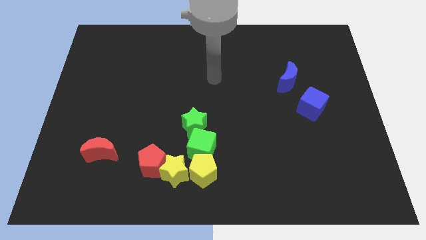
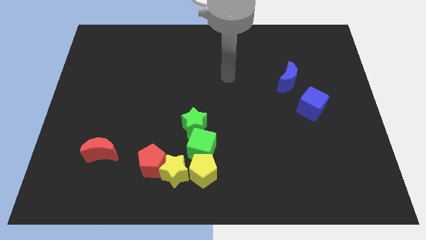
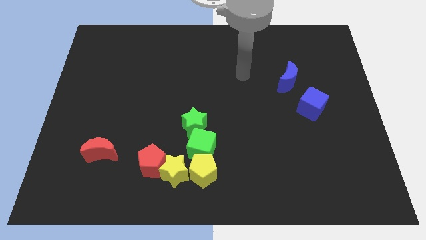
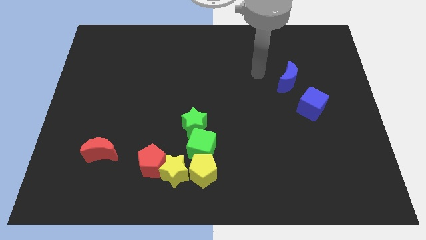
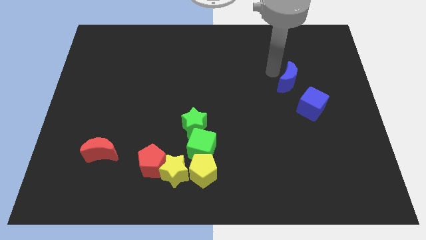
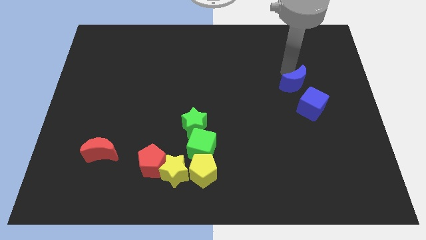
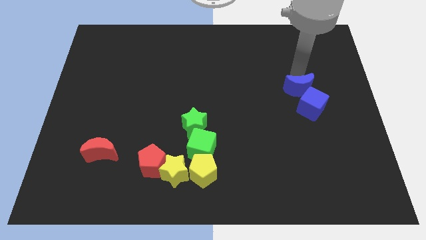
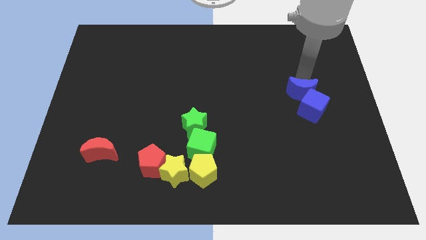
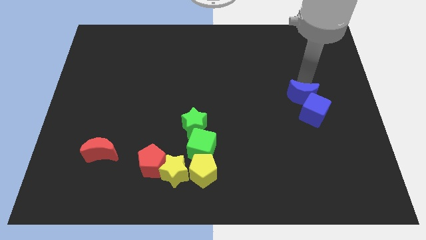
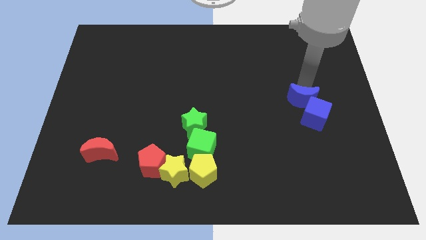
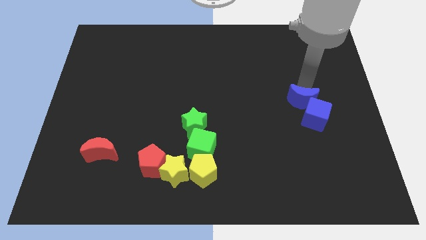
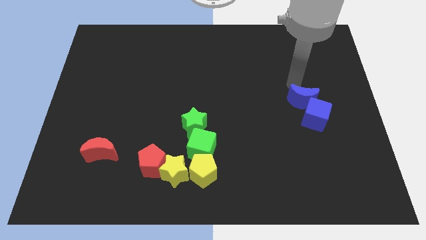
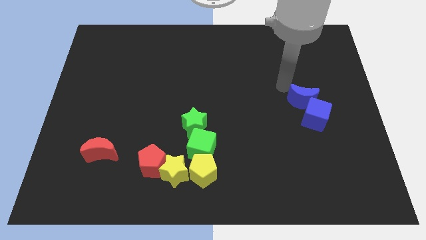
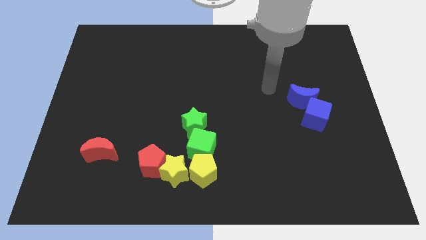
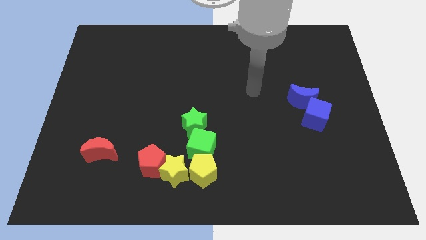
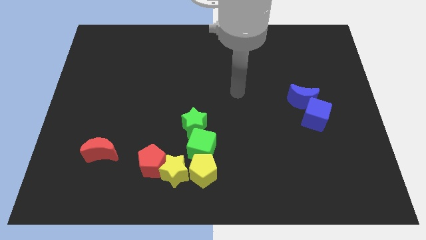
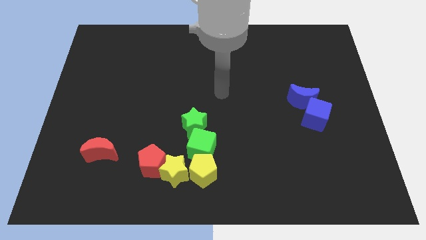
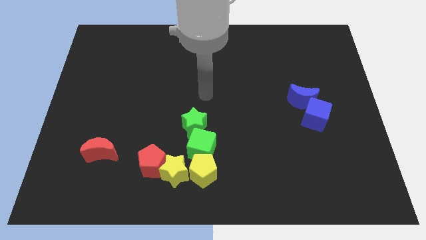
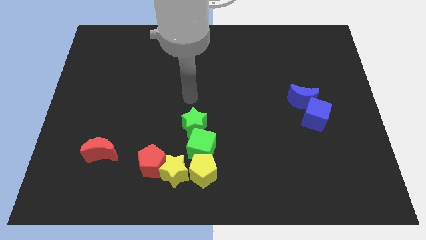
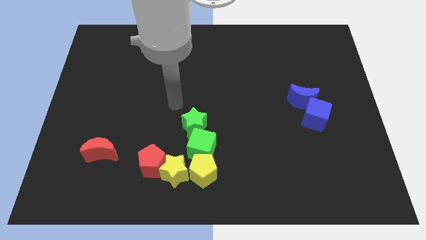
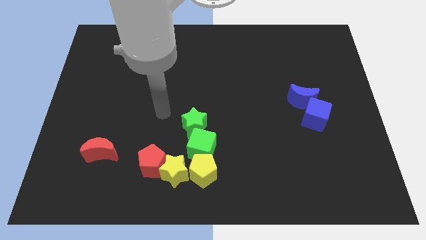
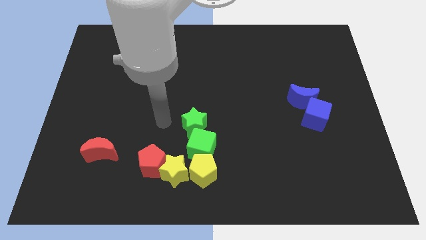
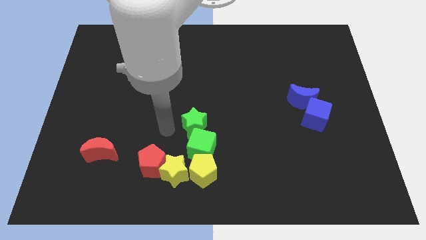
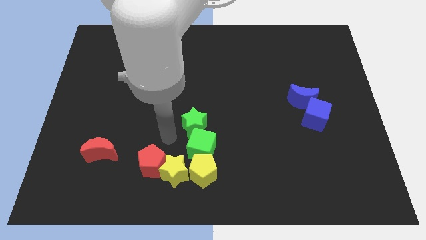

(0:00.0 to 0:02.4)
move the blue crescent into the blue cube

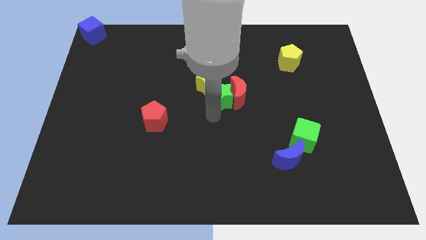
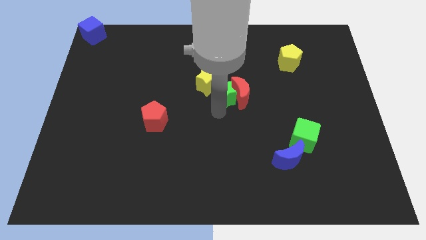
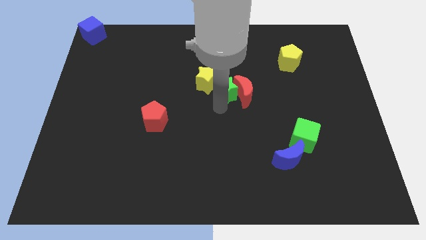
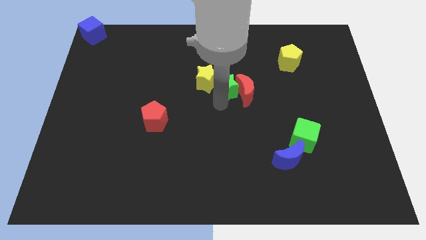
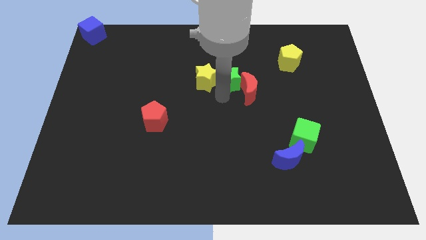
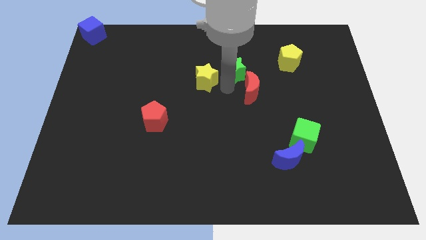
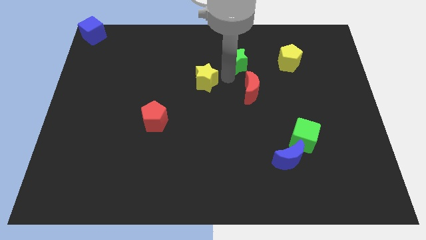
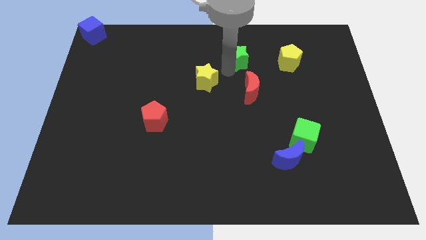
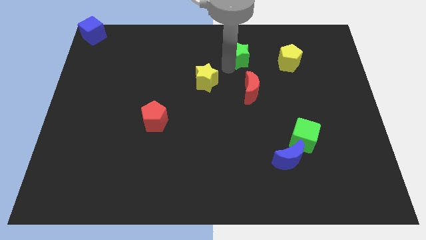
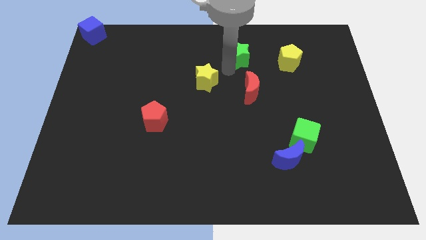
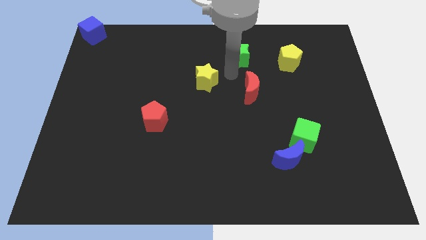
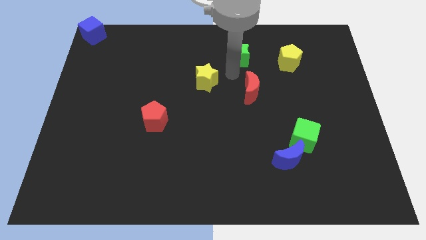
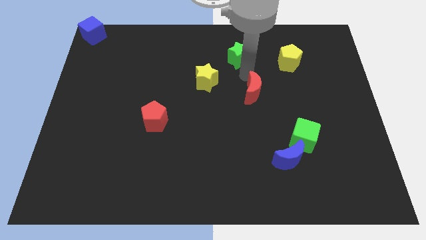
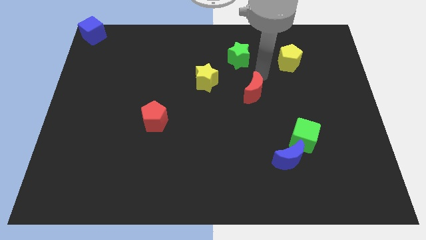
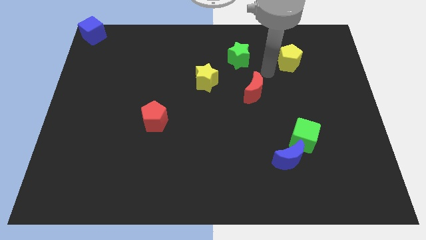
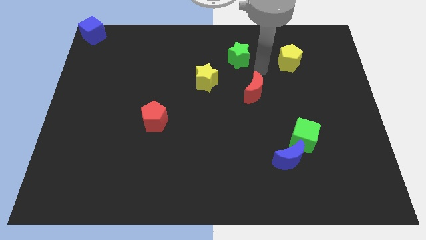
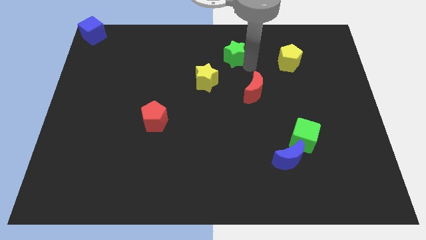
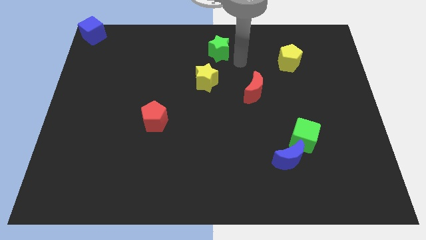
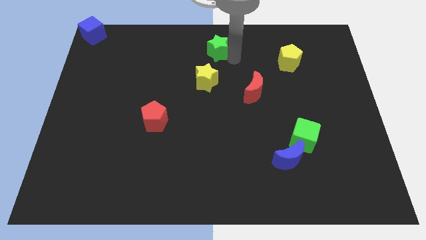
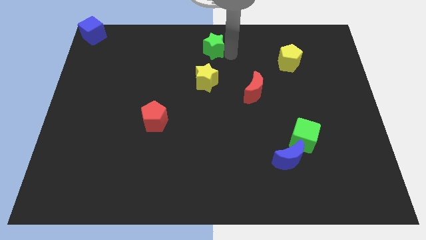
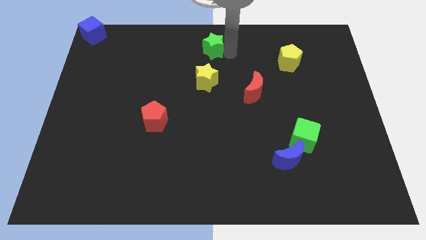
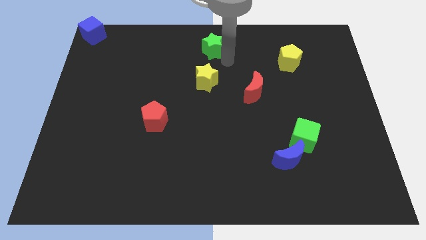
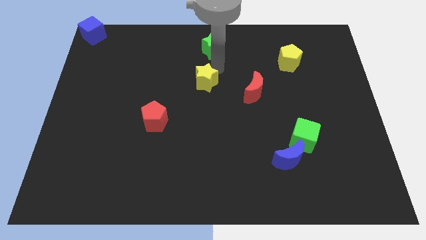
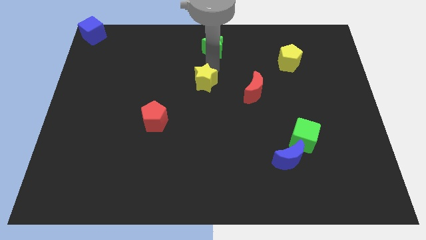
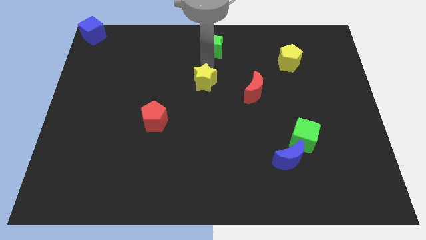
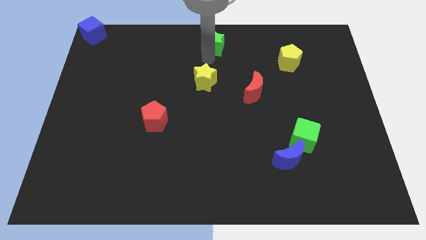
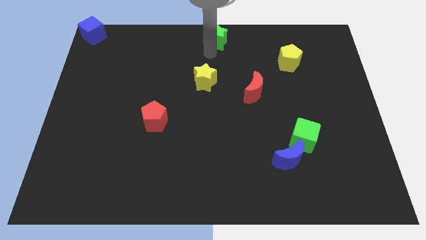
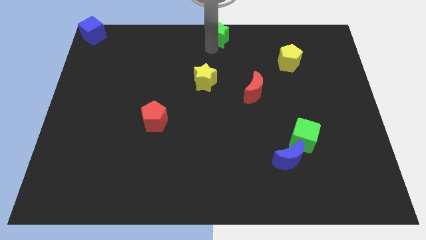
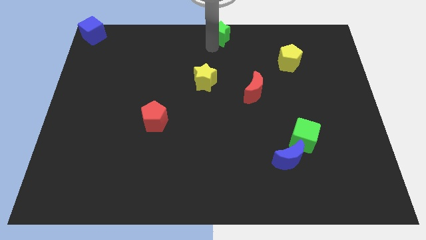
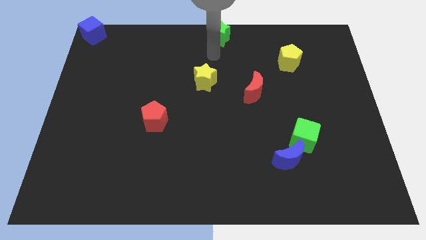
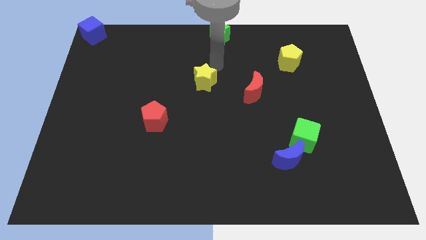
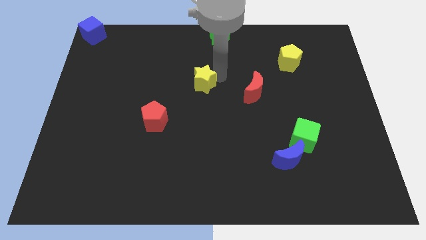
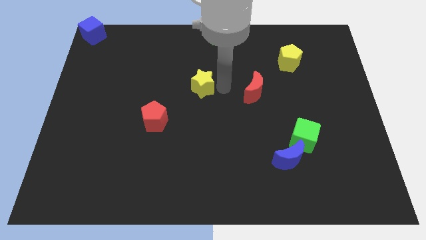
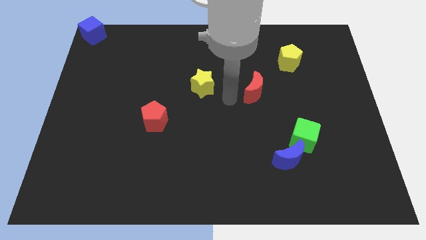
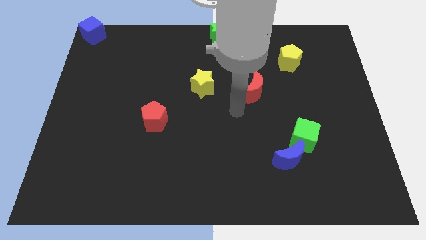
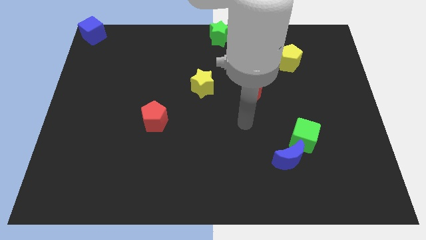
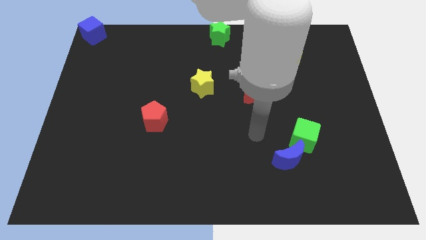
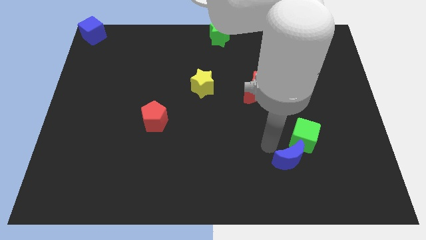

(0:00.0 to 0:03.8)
put the green star at the top center of the board

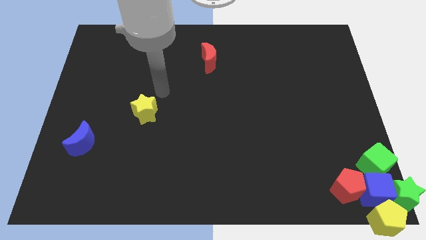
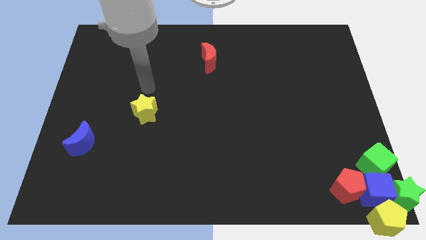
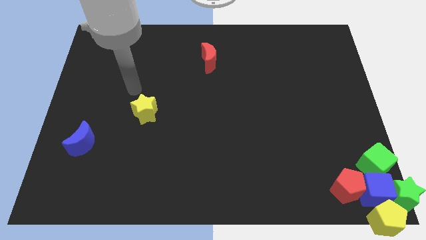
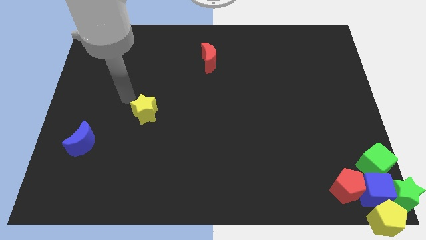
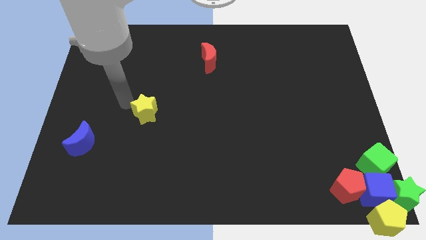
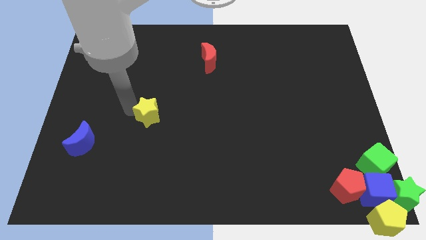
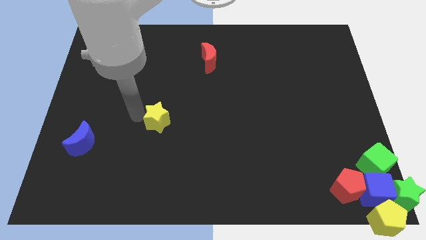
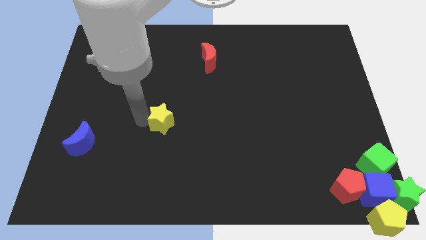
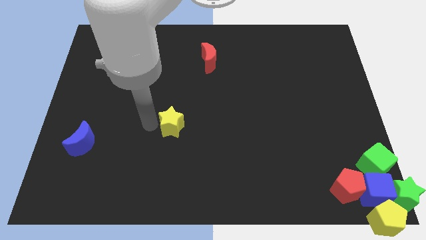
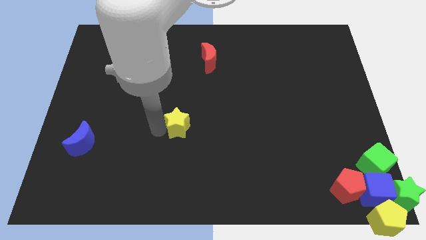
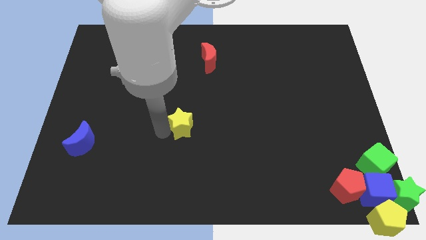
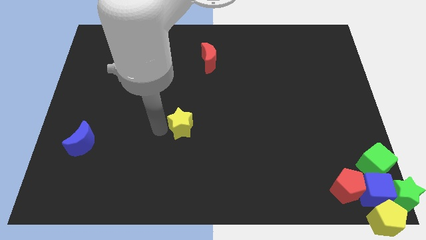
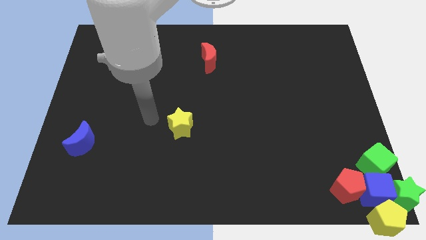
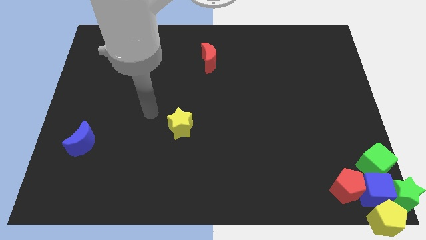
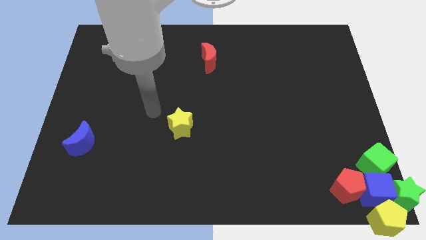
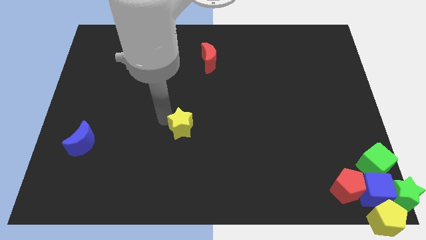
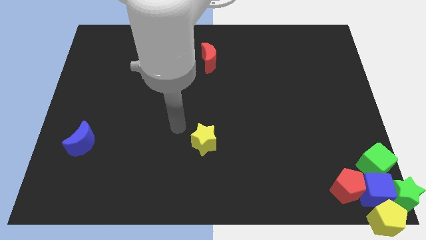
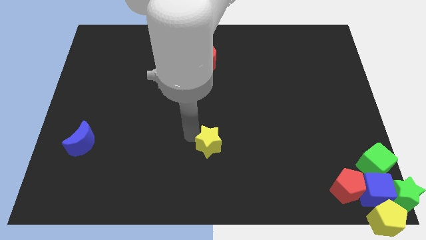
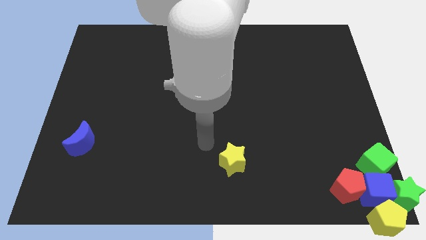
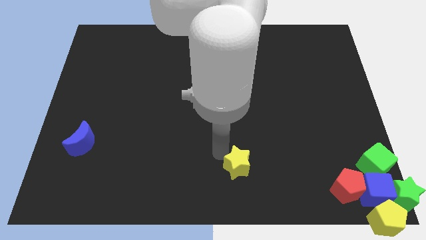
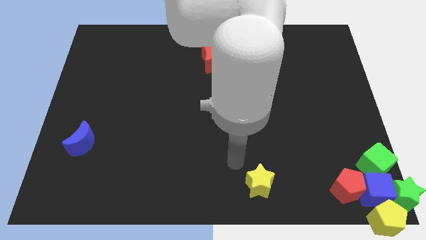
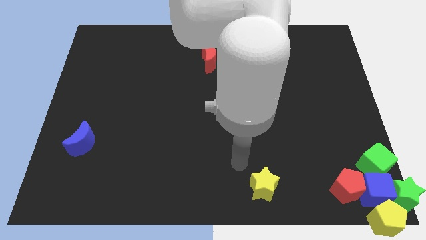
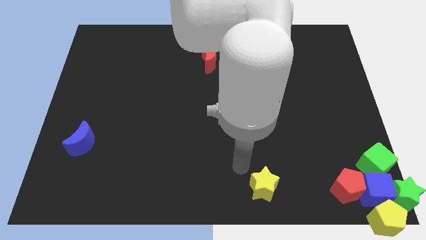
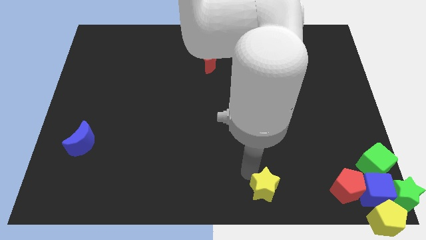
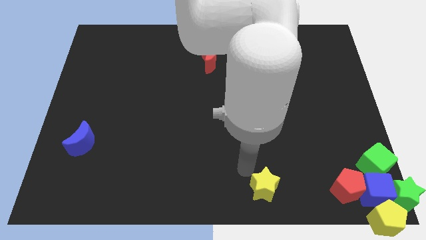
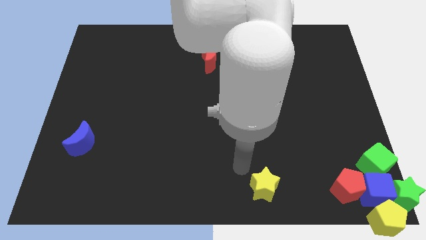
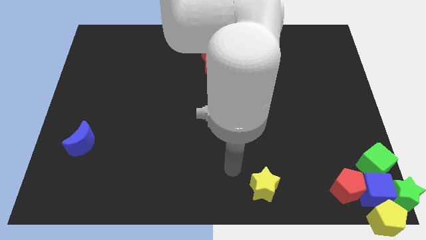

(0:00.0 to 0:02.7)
put the yellow star horizontally left to the red pentagon

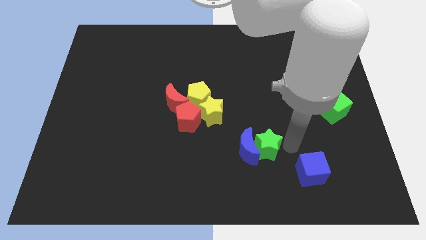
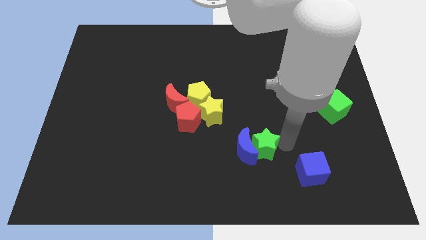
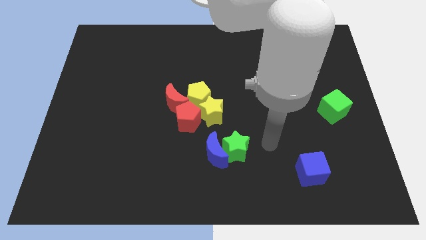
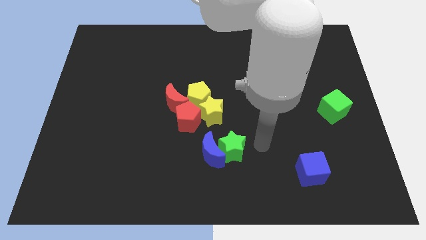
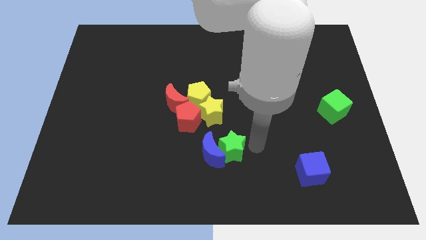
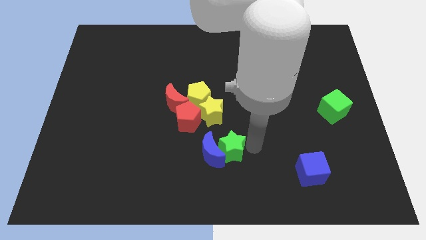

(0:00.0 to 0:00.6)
push the green star to the right of the blue crescent
